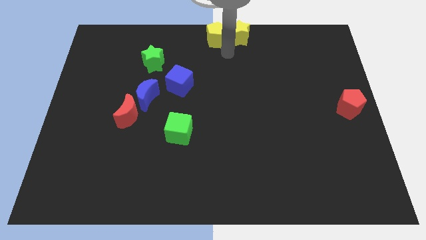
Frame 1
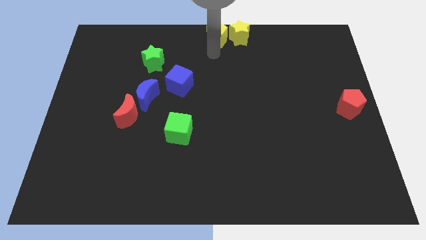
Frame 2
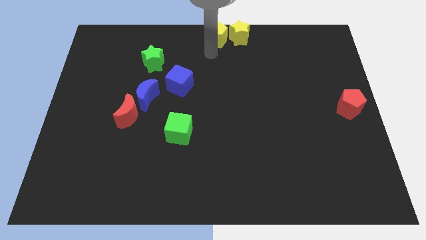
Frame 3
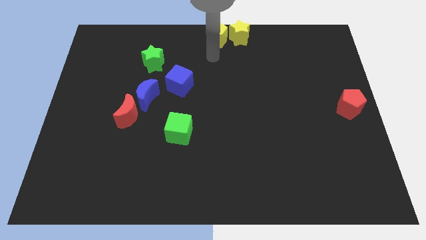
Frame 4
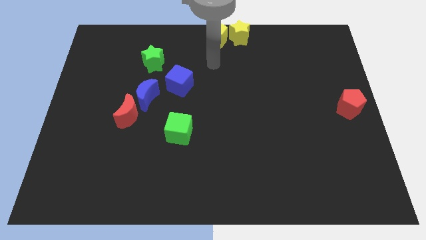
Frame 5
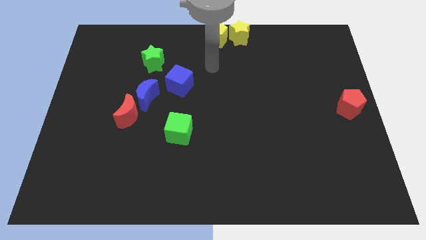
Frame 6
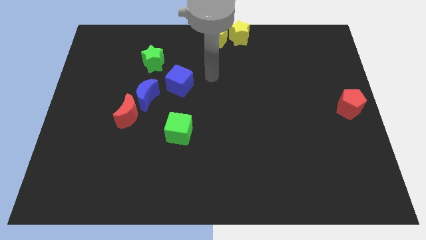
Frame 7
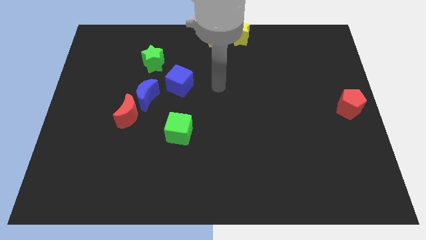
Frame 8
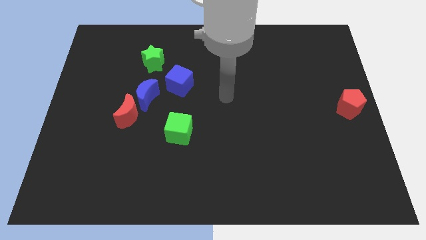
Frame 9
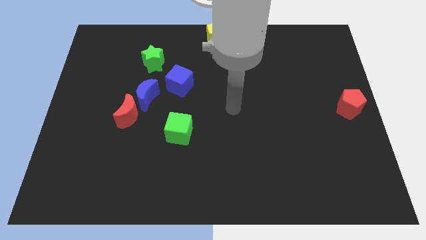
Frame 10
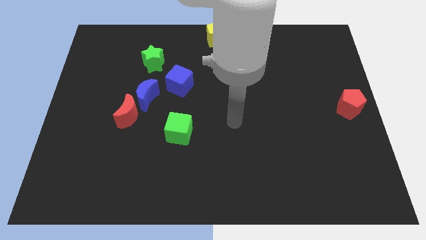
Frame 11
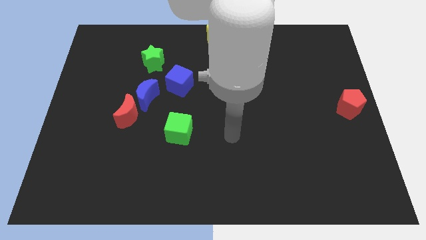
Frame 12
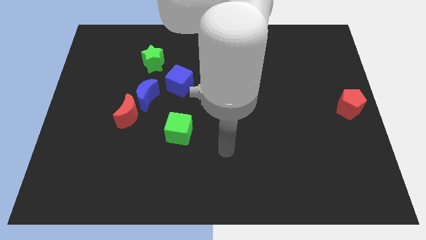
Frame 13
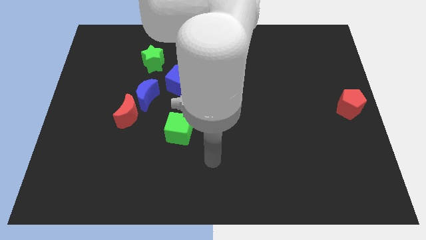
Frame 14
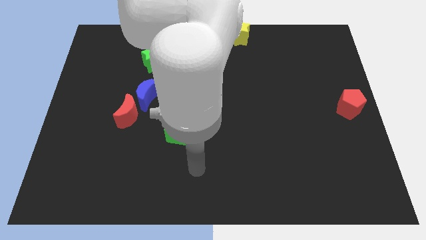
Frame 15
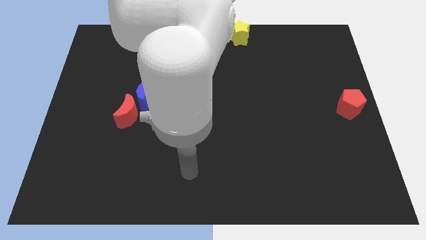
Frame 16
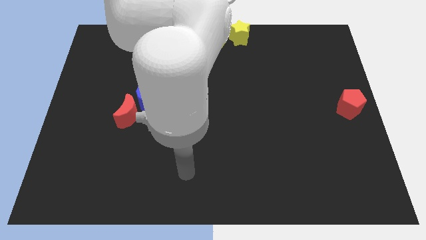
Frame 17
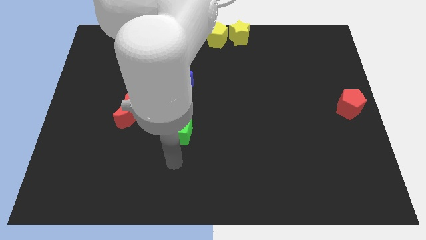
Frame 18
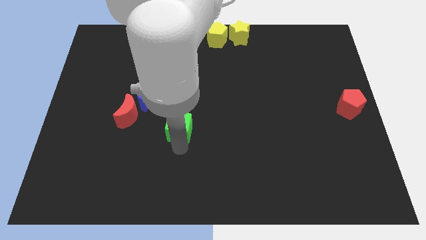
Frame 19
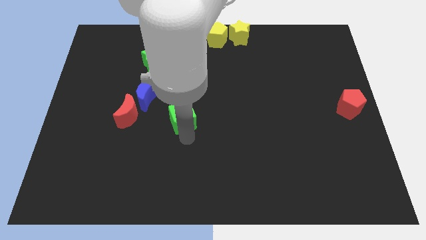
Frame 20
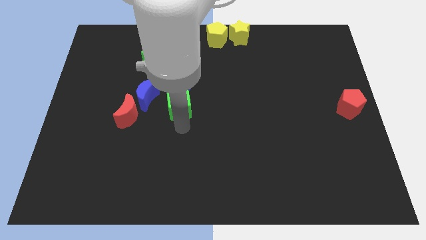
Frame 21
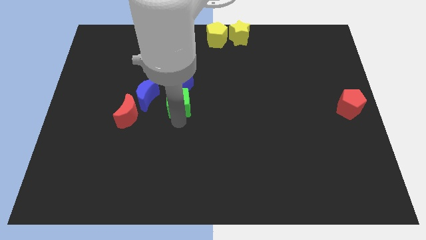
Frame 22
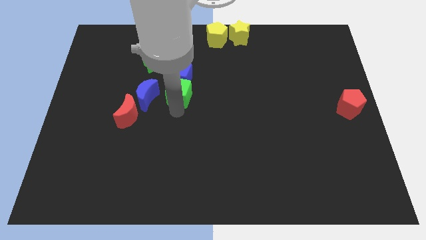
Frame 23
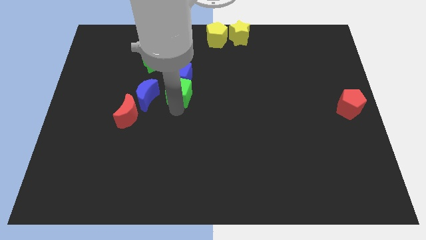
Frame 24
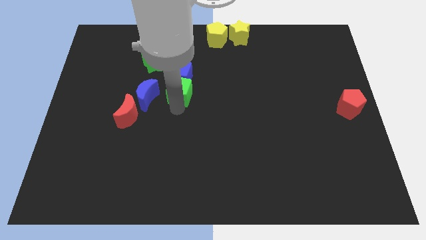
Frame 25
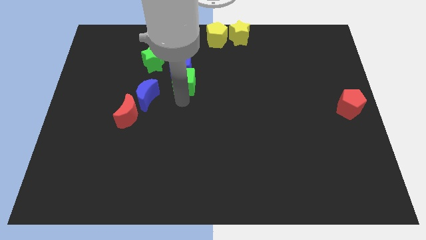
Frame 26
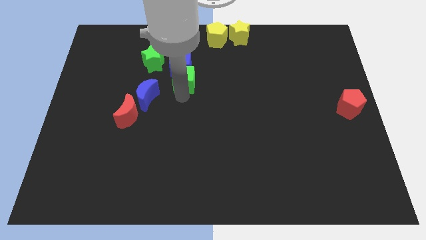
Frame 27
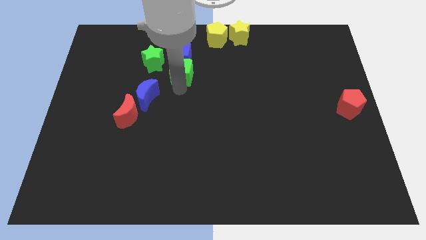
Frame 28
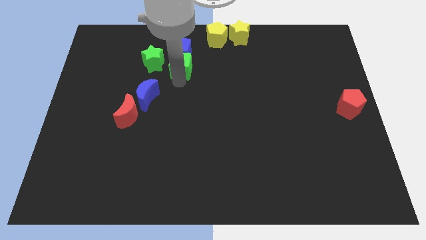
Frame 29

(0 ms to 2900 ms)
move the green cube into the blue cube

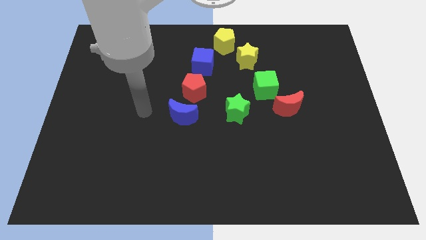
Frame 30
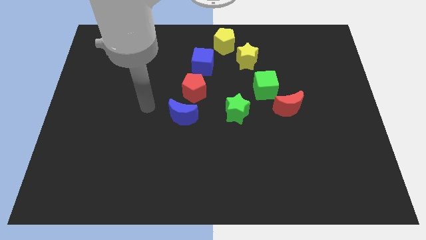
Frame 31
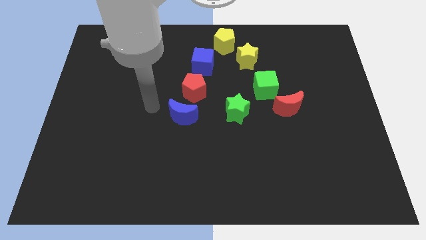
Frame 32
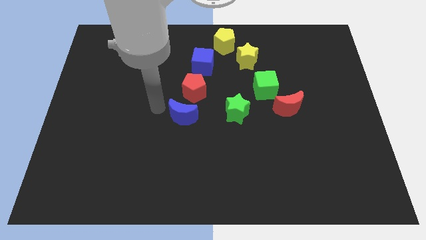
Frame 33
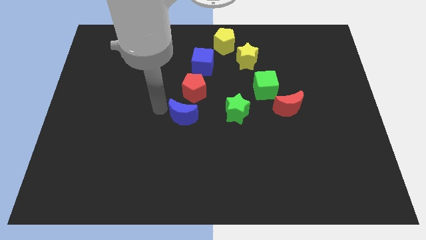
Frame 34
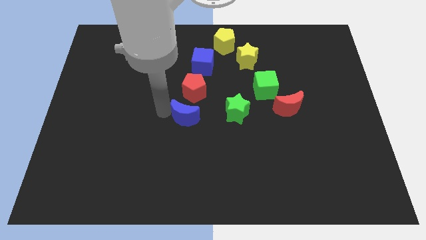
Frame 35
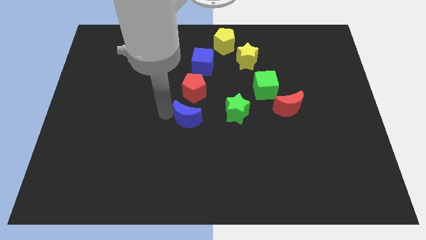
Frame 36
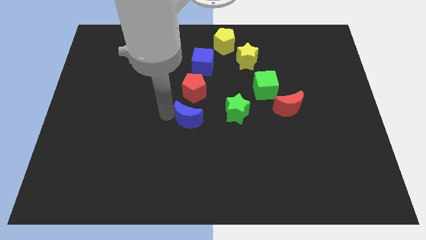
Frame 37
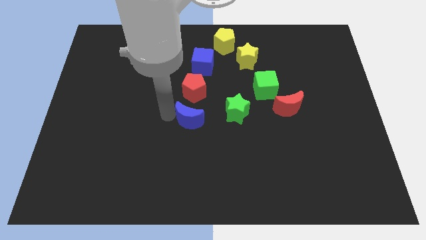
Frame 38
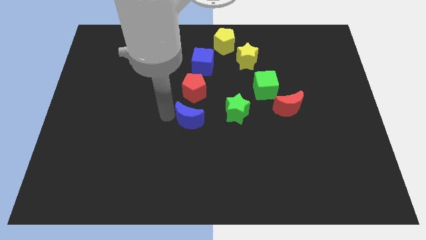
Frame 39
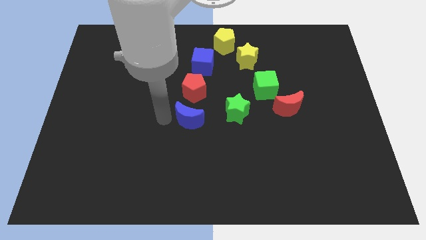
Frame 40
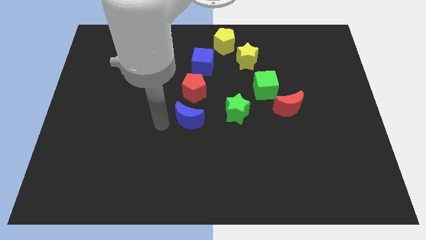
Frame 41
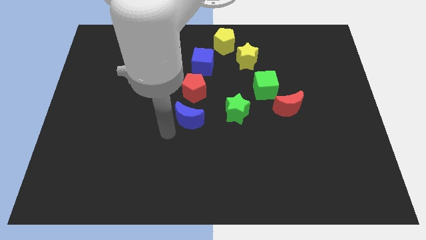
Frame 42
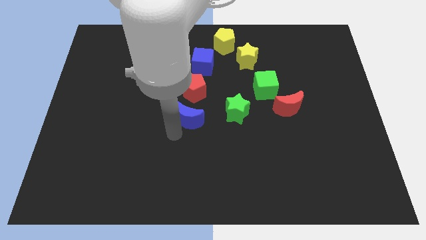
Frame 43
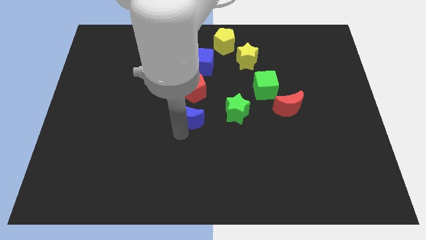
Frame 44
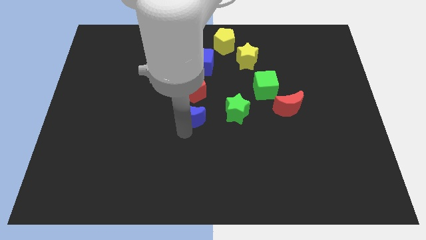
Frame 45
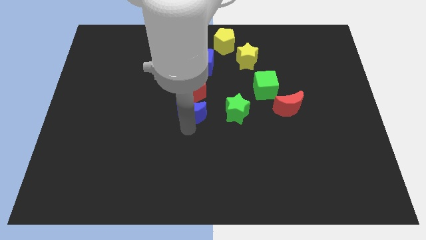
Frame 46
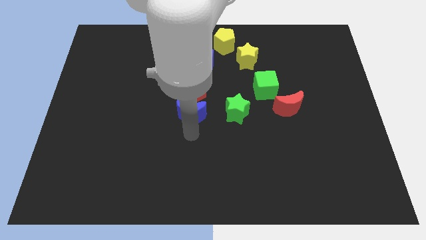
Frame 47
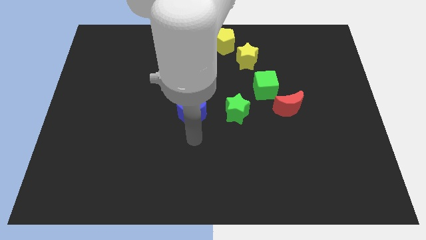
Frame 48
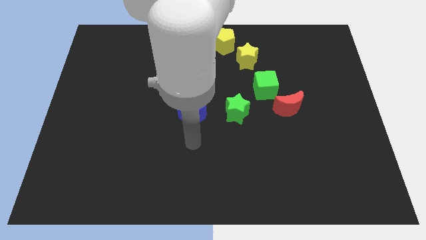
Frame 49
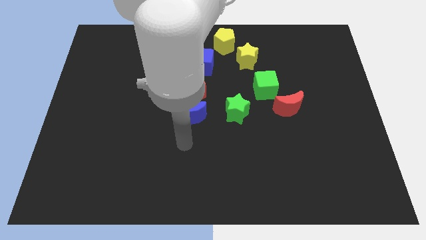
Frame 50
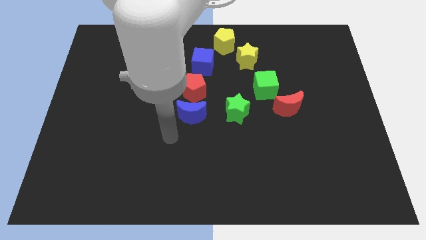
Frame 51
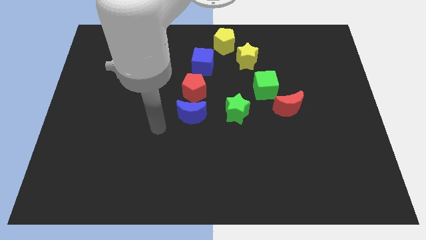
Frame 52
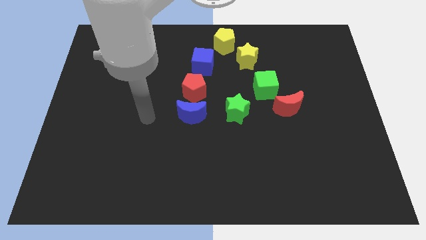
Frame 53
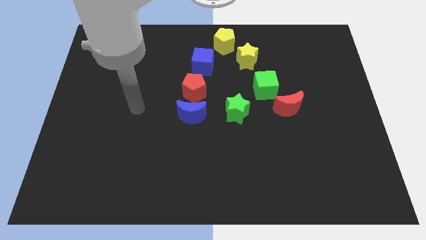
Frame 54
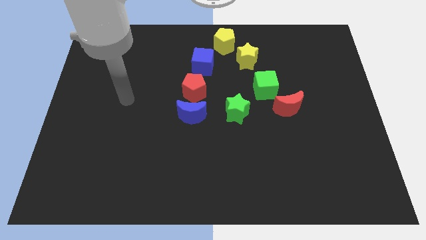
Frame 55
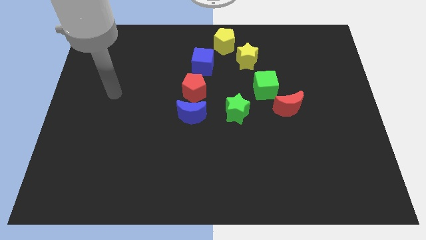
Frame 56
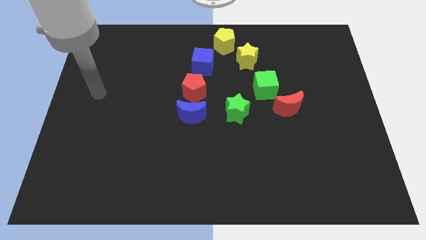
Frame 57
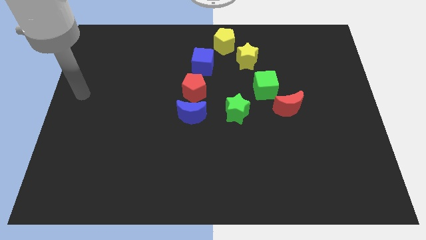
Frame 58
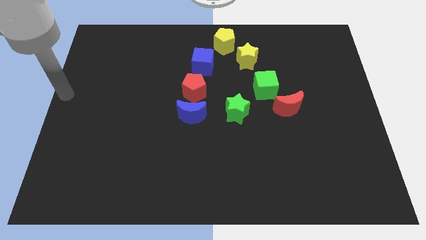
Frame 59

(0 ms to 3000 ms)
push blue crescent towards red pentagon

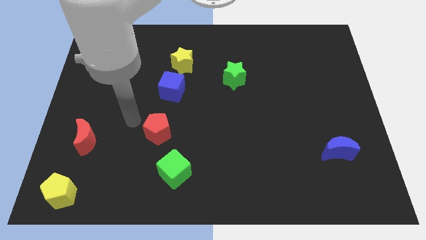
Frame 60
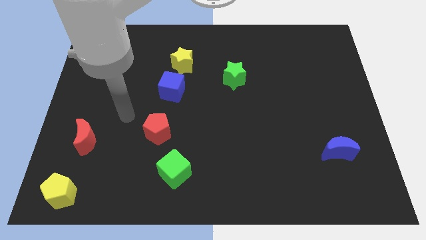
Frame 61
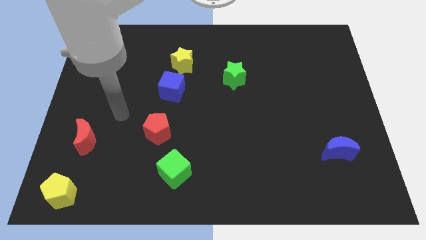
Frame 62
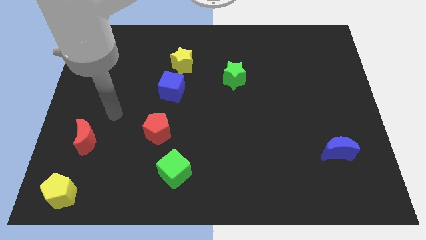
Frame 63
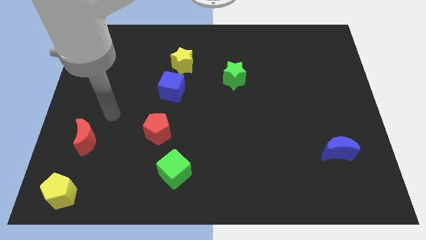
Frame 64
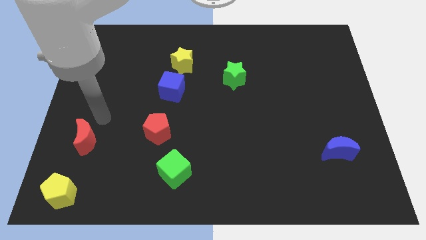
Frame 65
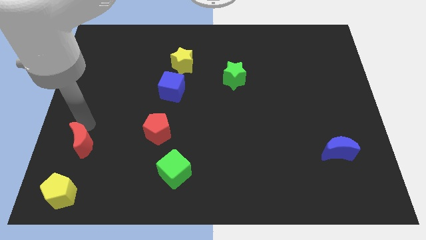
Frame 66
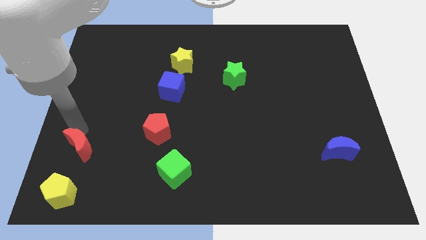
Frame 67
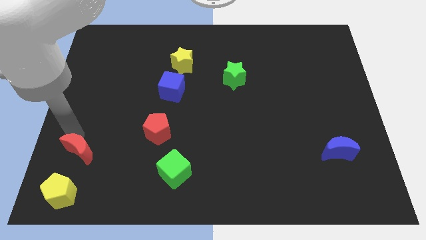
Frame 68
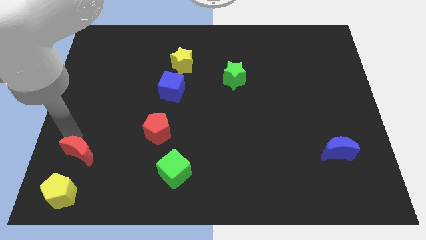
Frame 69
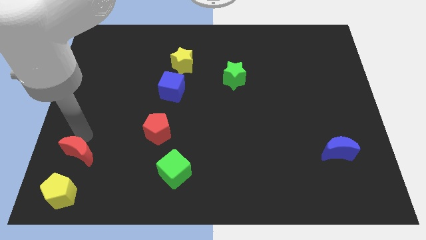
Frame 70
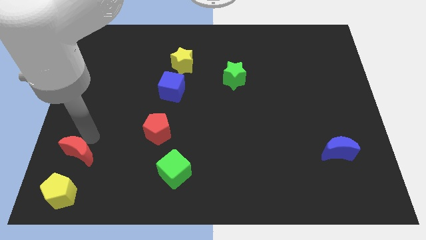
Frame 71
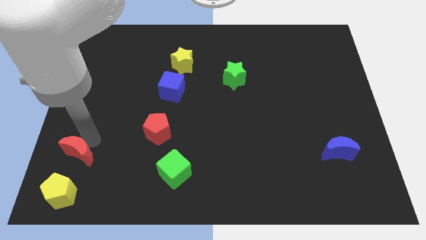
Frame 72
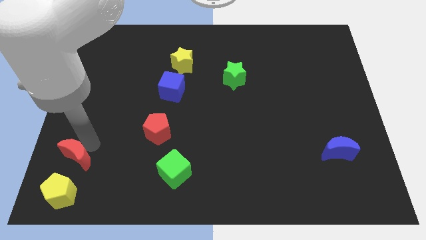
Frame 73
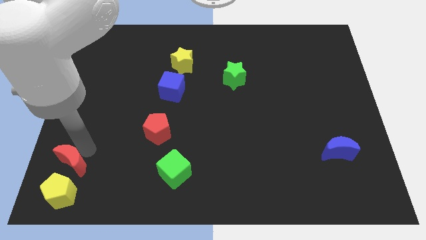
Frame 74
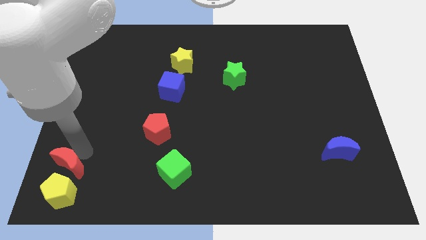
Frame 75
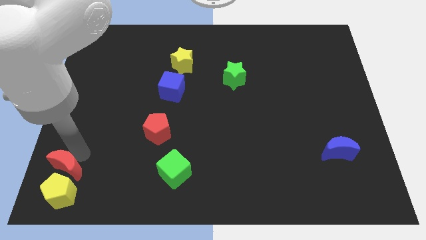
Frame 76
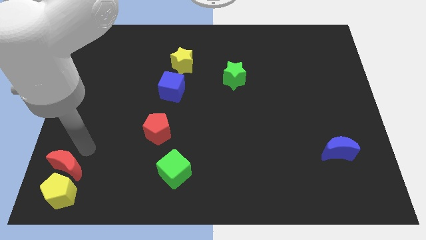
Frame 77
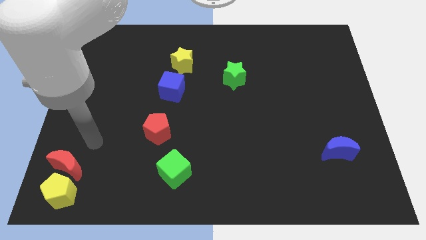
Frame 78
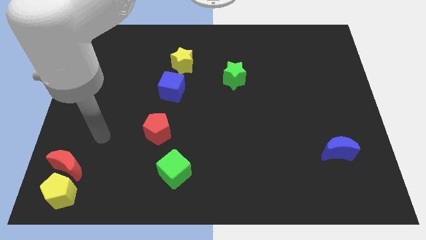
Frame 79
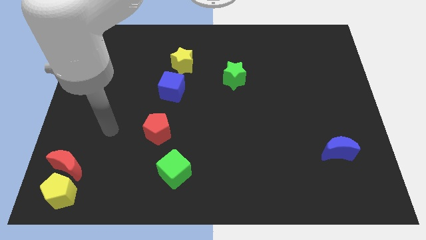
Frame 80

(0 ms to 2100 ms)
push the red moon on top of yellow pentagon

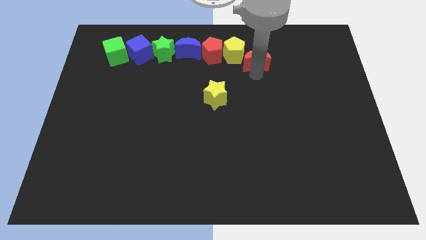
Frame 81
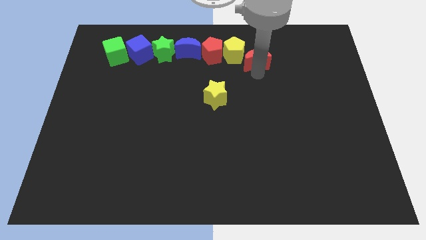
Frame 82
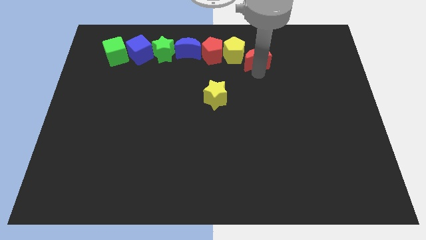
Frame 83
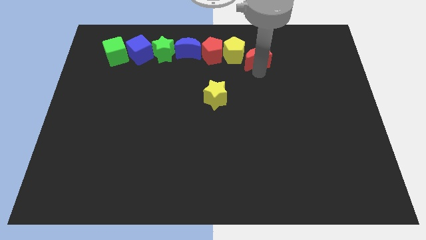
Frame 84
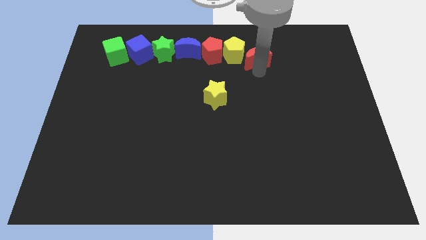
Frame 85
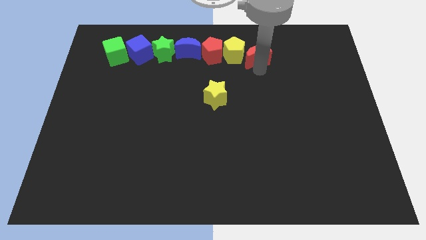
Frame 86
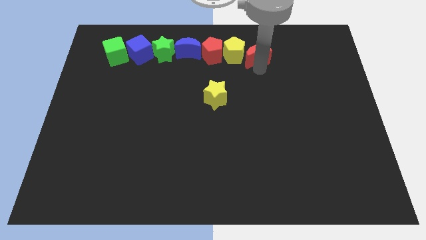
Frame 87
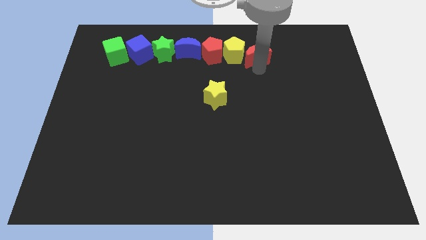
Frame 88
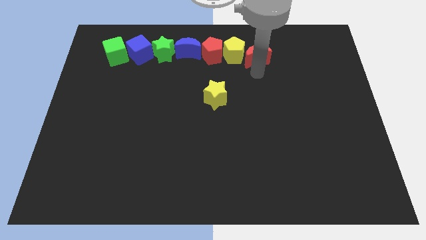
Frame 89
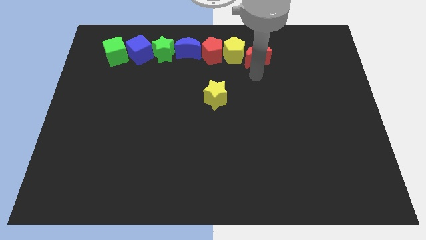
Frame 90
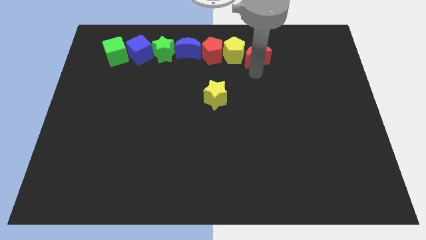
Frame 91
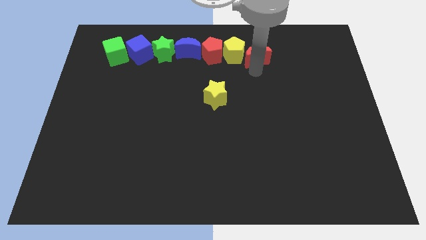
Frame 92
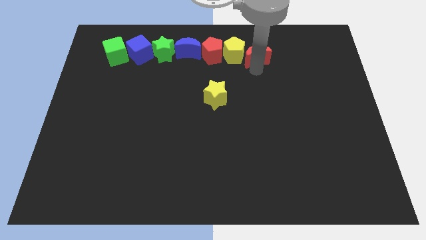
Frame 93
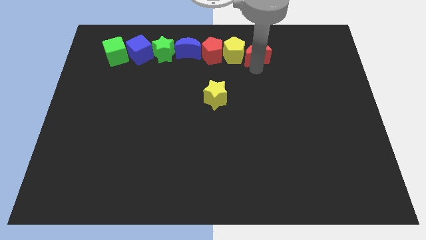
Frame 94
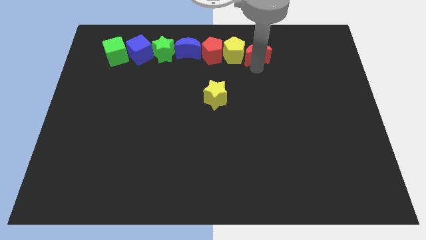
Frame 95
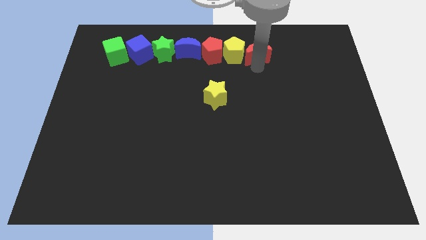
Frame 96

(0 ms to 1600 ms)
place red crescent to the right of the yellow pentagon
